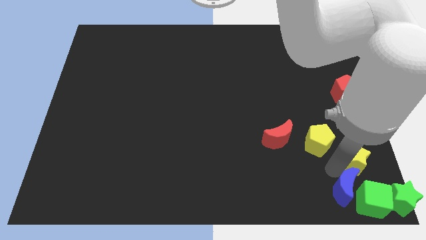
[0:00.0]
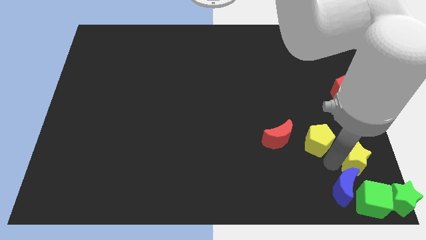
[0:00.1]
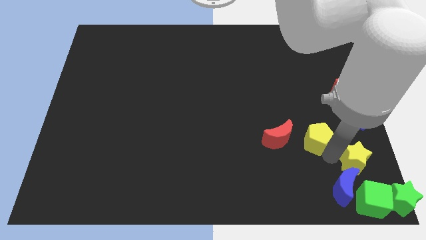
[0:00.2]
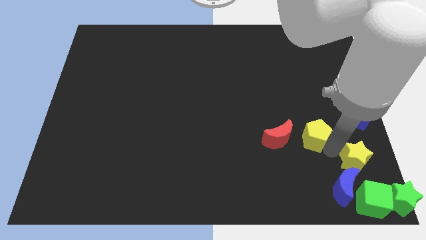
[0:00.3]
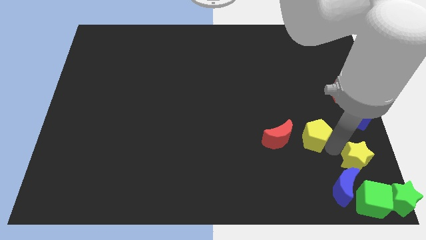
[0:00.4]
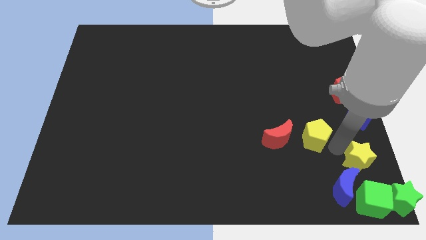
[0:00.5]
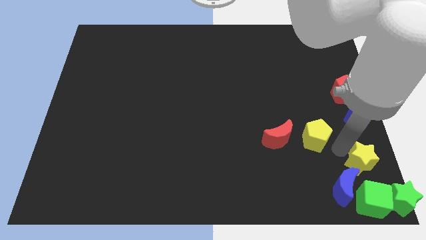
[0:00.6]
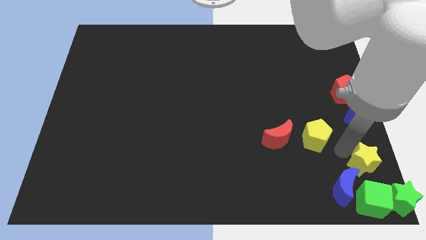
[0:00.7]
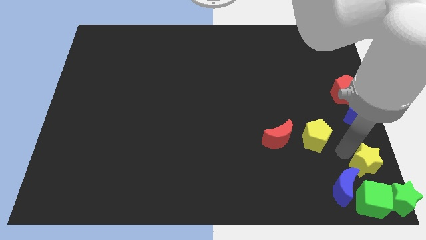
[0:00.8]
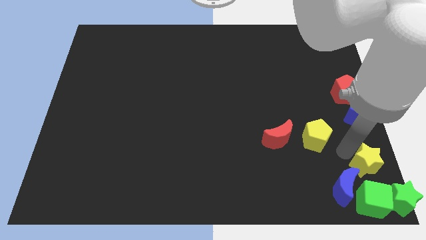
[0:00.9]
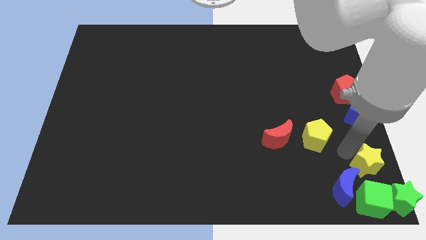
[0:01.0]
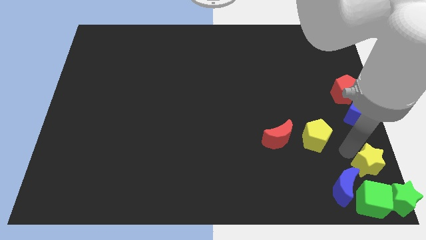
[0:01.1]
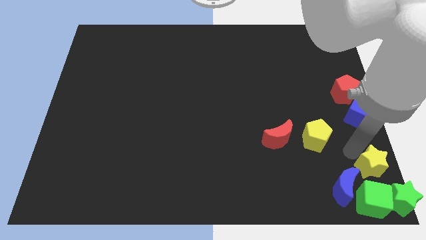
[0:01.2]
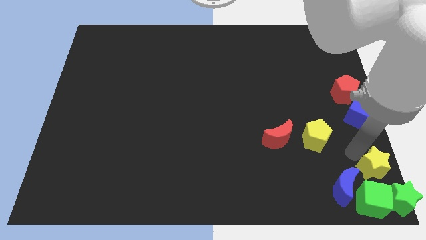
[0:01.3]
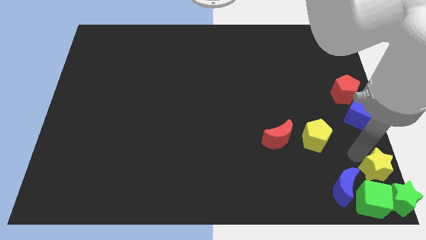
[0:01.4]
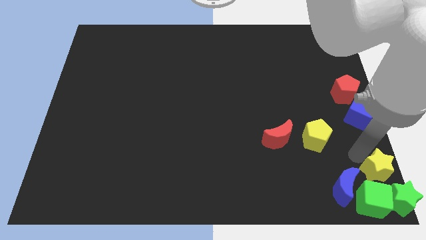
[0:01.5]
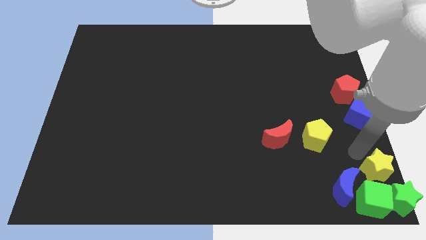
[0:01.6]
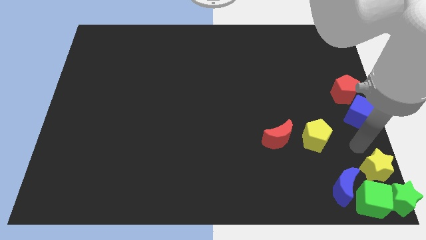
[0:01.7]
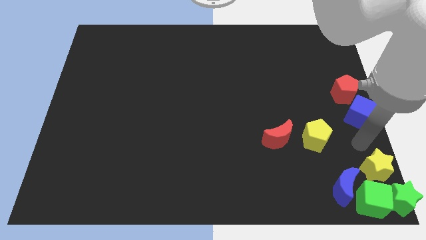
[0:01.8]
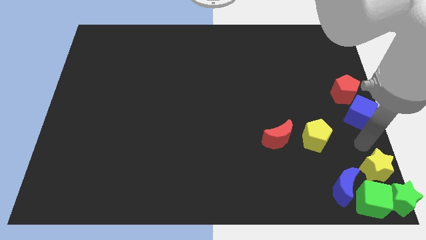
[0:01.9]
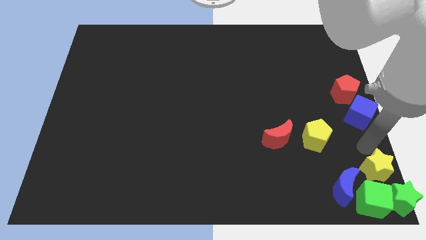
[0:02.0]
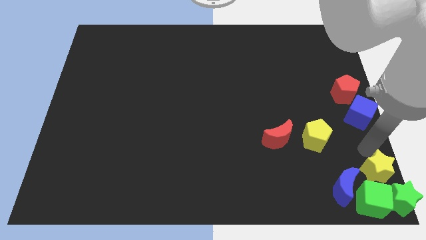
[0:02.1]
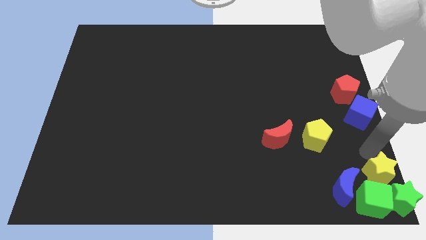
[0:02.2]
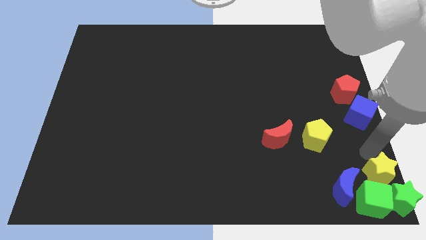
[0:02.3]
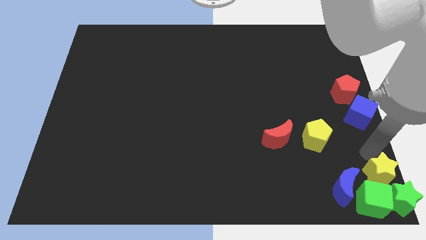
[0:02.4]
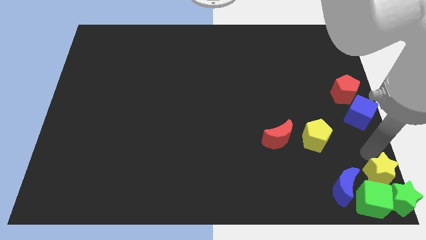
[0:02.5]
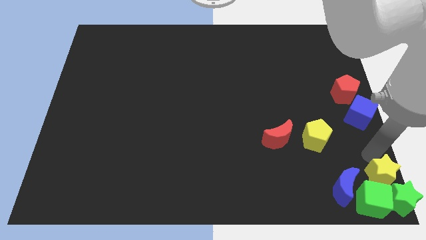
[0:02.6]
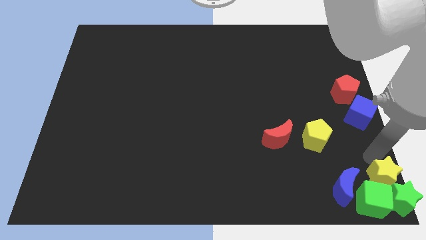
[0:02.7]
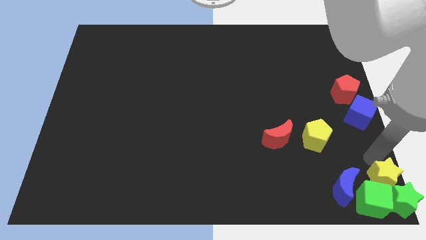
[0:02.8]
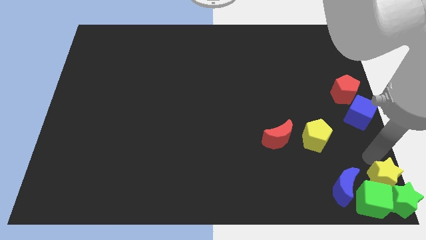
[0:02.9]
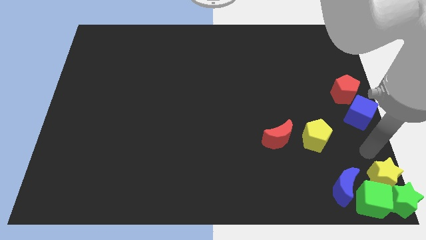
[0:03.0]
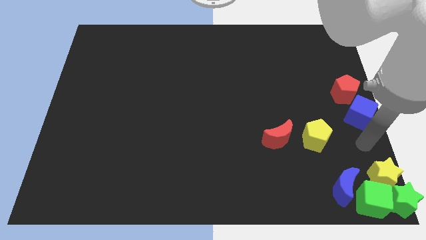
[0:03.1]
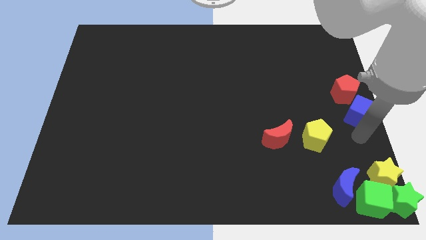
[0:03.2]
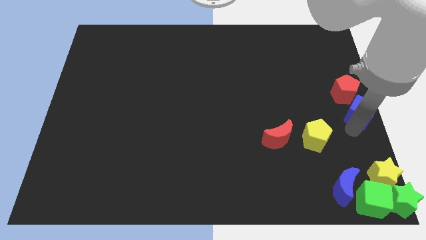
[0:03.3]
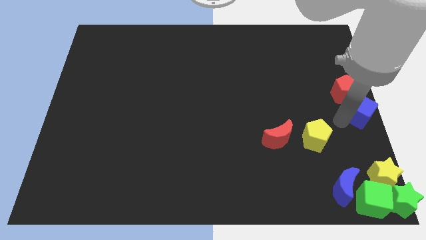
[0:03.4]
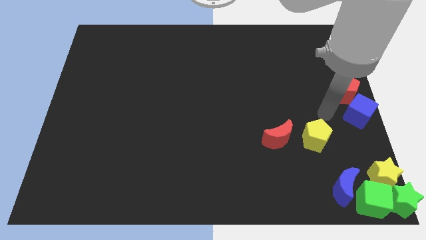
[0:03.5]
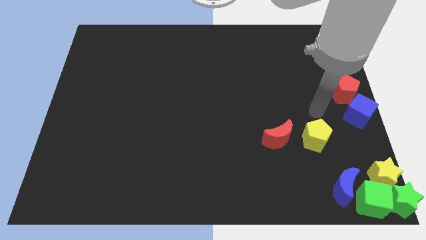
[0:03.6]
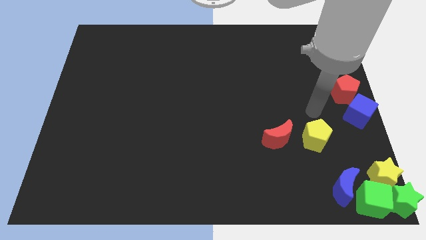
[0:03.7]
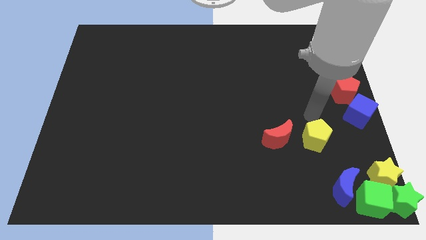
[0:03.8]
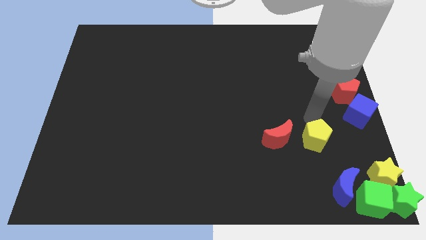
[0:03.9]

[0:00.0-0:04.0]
push the yellow star into the green star

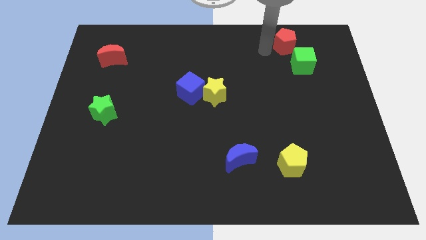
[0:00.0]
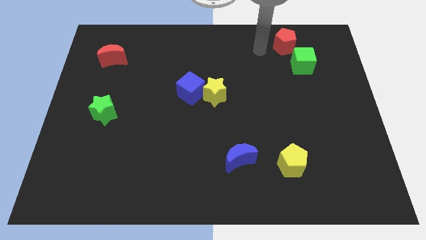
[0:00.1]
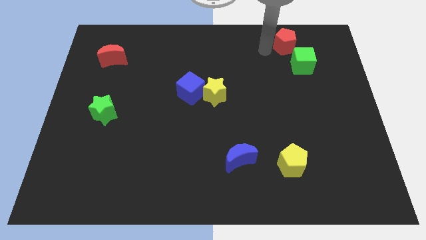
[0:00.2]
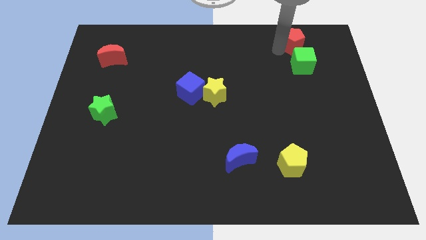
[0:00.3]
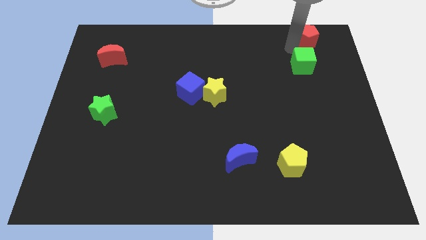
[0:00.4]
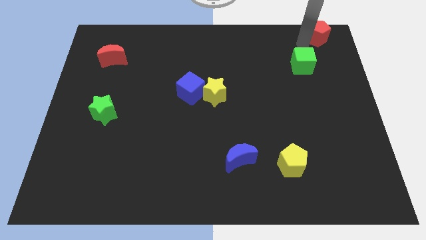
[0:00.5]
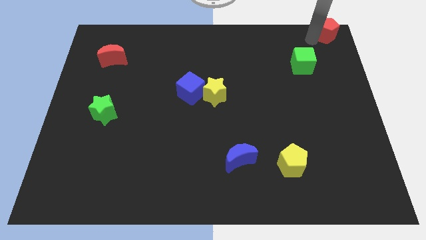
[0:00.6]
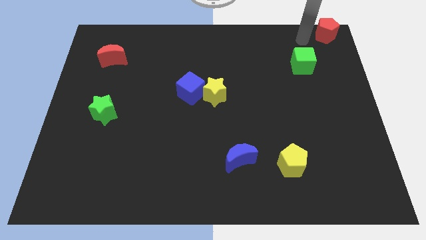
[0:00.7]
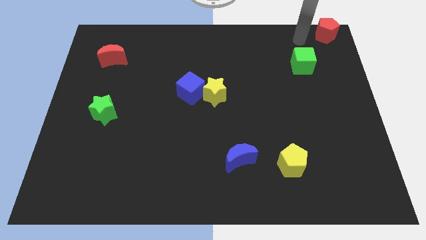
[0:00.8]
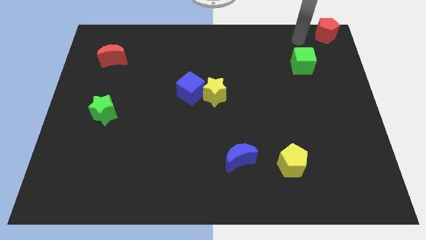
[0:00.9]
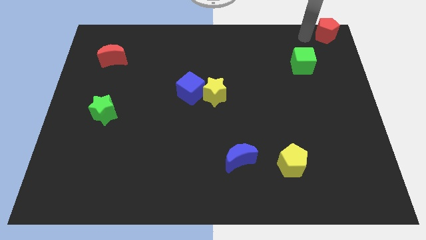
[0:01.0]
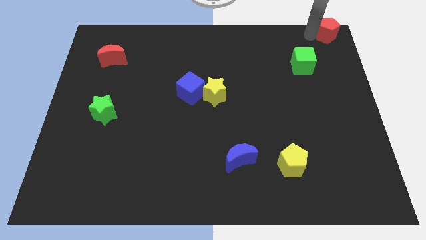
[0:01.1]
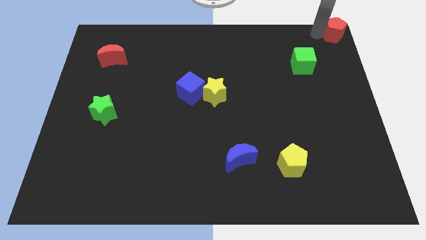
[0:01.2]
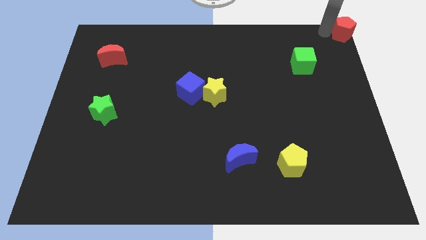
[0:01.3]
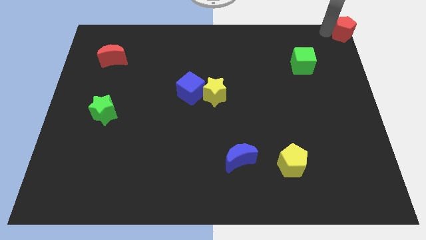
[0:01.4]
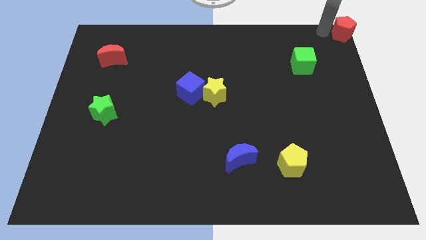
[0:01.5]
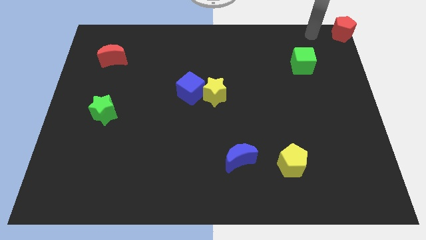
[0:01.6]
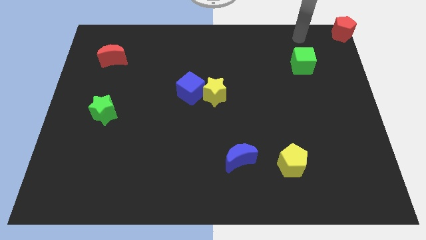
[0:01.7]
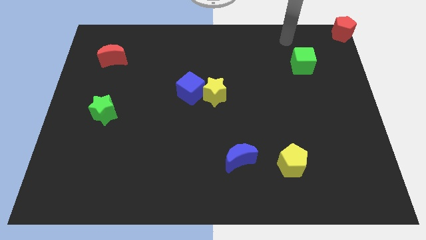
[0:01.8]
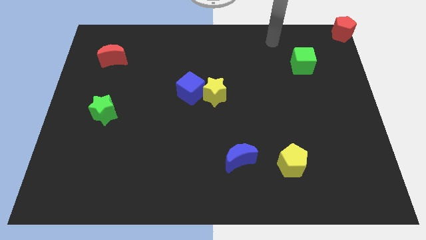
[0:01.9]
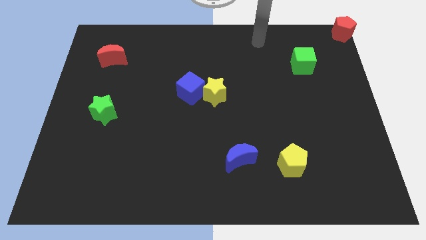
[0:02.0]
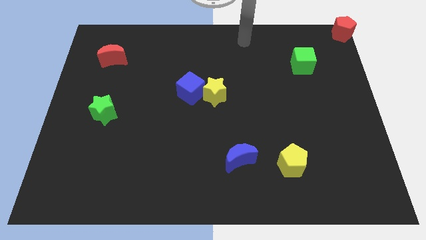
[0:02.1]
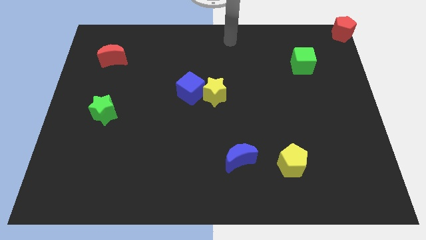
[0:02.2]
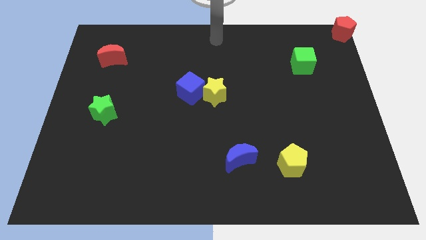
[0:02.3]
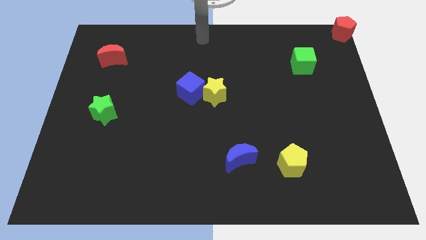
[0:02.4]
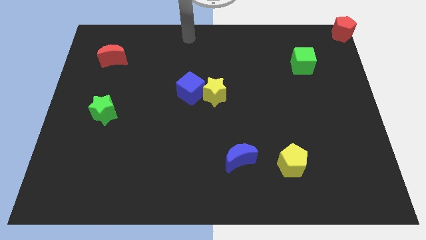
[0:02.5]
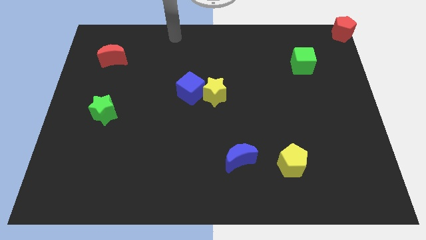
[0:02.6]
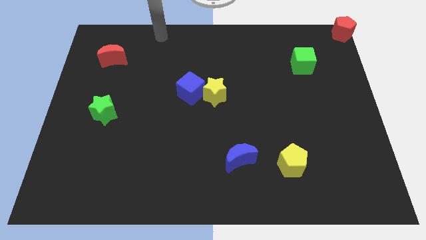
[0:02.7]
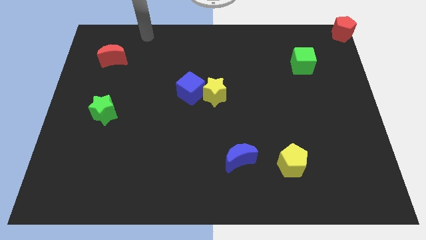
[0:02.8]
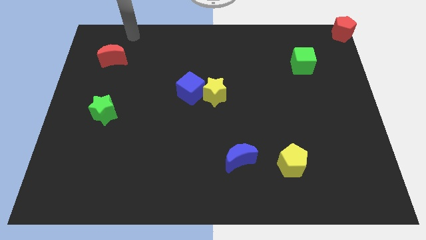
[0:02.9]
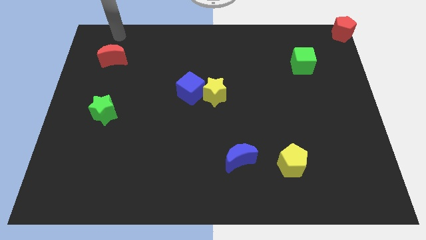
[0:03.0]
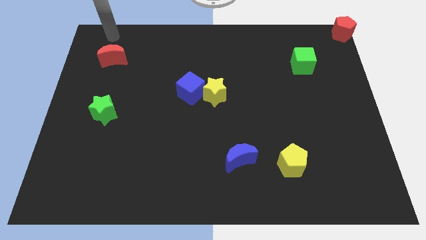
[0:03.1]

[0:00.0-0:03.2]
move the red pentagon to the top right corner

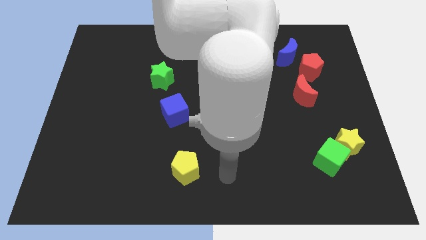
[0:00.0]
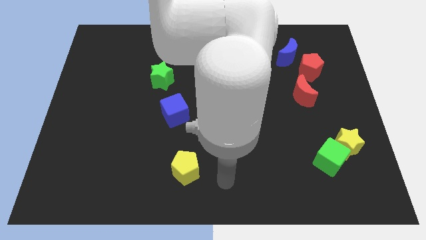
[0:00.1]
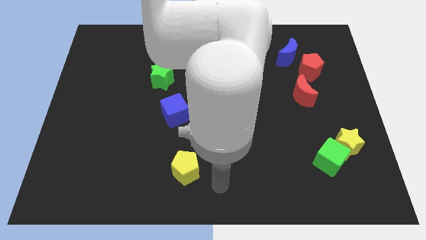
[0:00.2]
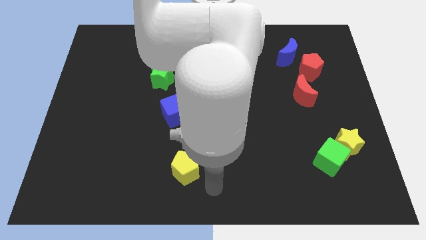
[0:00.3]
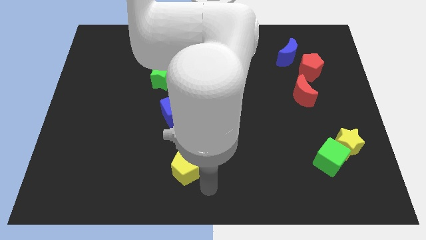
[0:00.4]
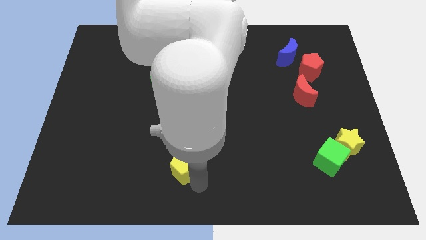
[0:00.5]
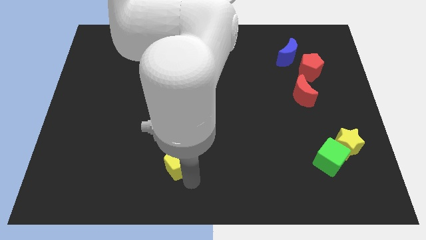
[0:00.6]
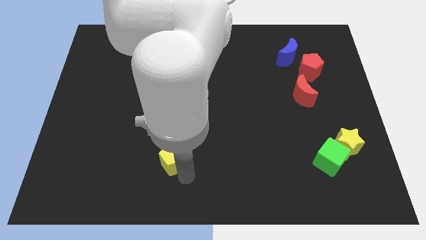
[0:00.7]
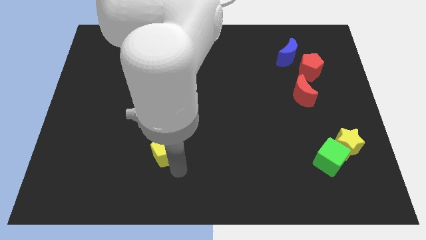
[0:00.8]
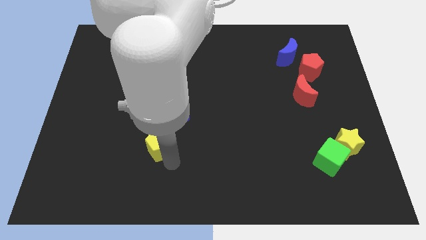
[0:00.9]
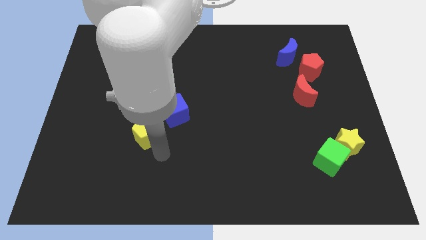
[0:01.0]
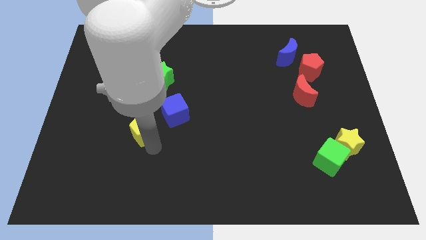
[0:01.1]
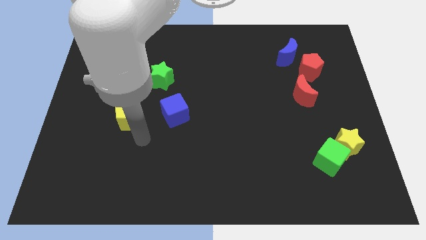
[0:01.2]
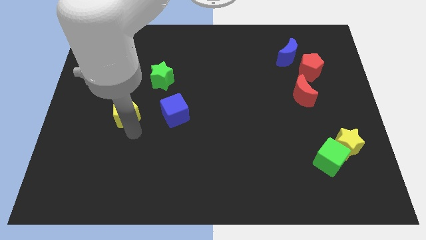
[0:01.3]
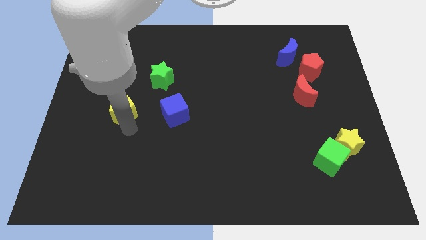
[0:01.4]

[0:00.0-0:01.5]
place yellow pentagon to the left of blue cube
